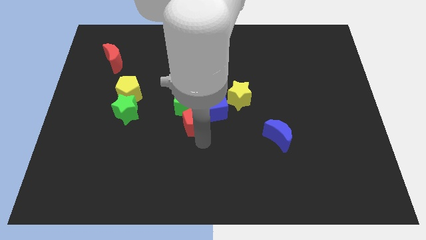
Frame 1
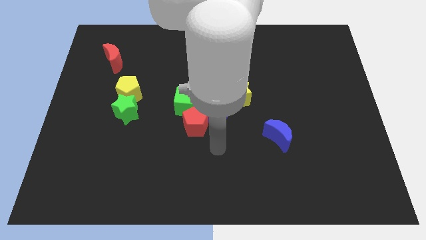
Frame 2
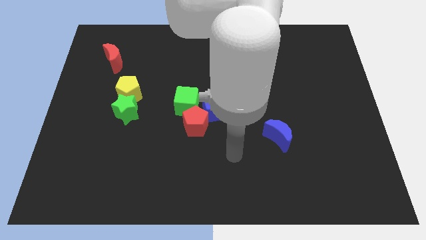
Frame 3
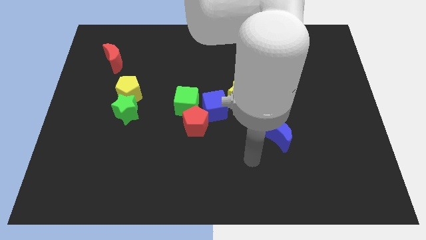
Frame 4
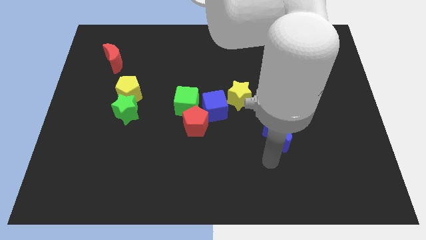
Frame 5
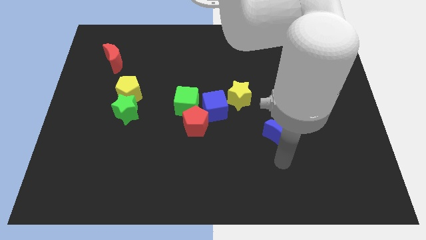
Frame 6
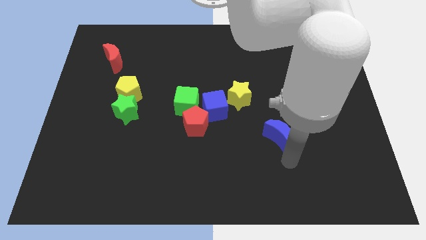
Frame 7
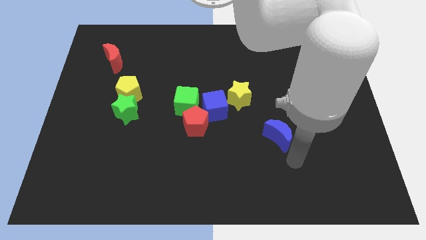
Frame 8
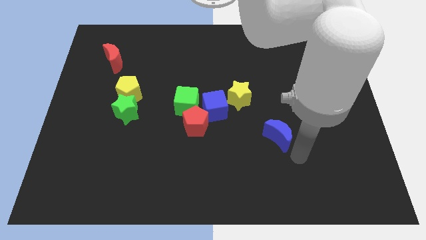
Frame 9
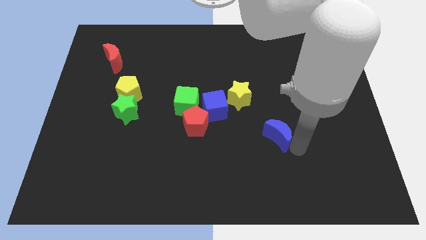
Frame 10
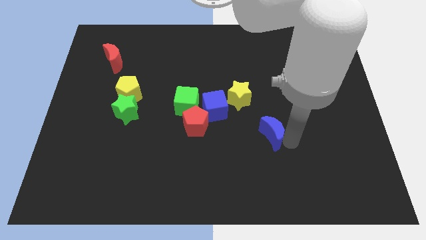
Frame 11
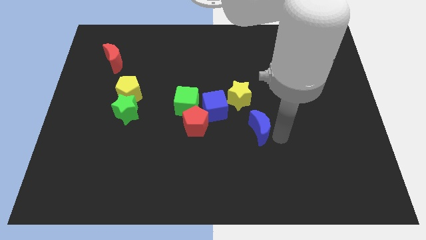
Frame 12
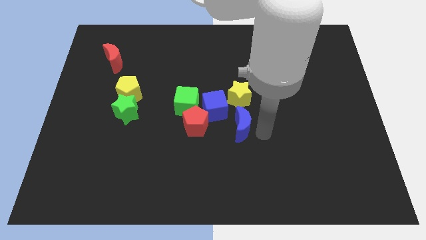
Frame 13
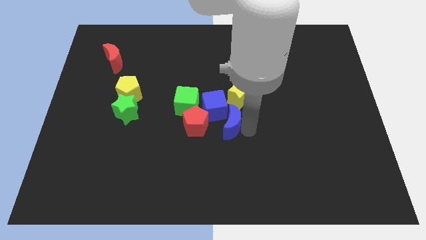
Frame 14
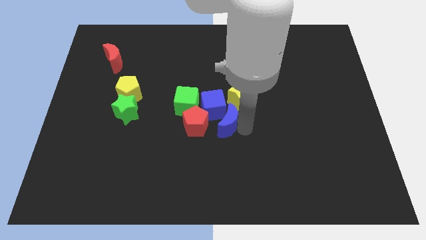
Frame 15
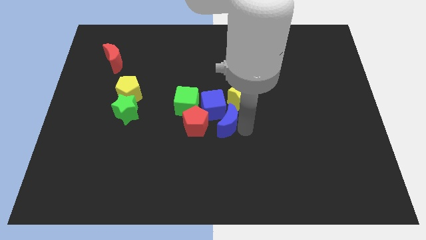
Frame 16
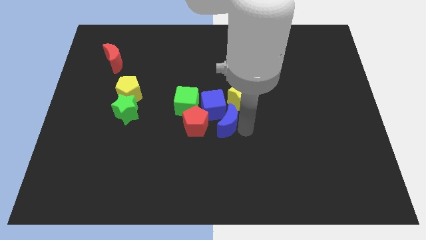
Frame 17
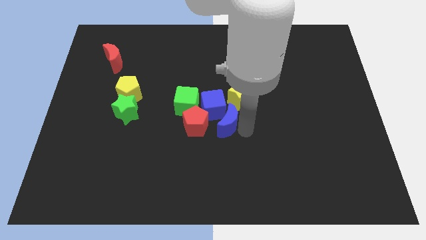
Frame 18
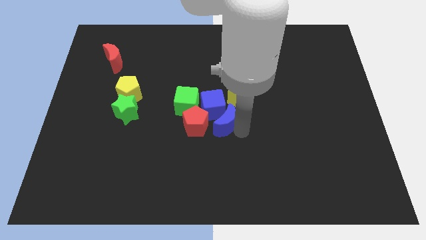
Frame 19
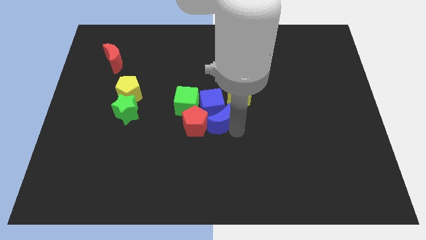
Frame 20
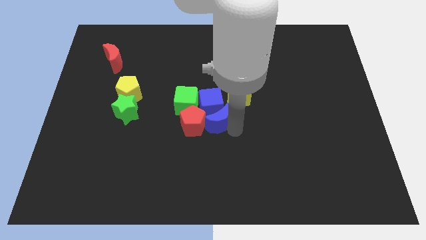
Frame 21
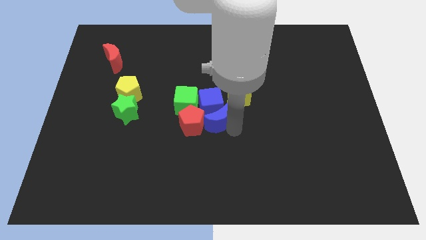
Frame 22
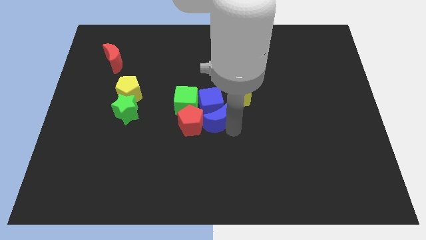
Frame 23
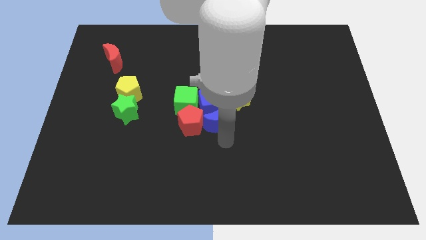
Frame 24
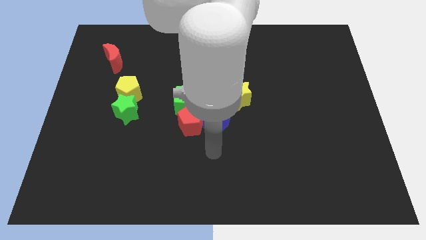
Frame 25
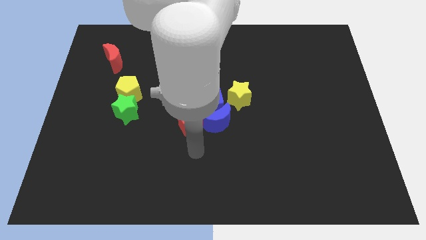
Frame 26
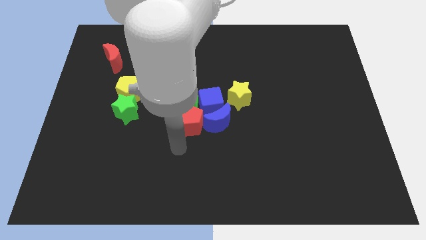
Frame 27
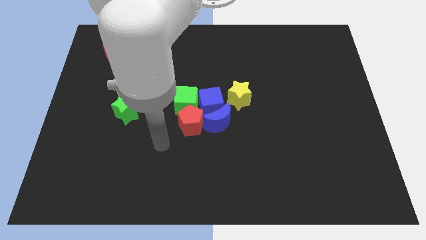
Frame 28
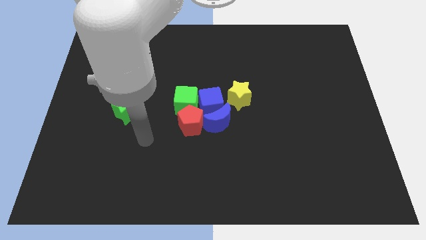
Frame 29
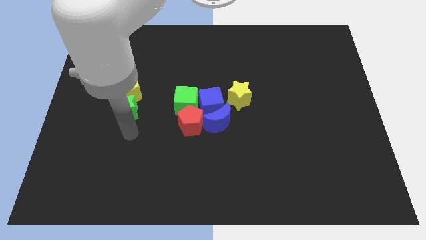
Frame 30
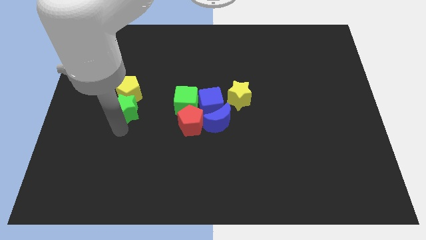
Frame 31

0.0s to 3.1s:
push the blue moon into the group of blocks

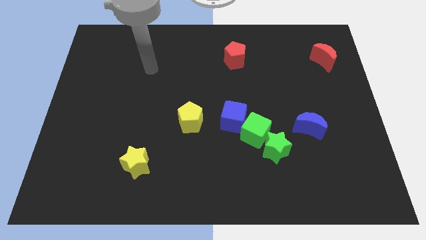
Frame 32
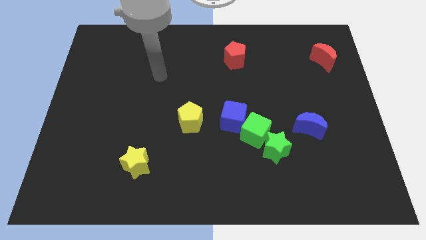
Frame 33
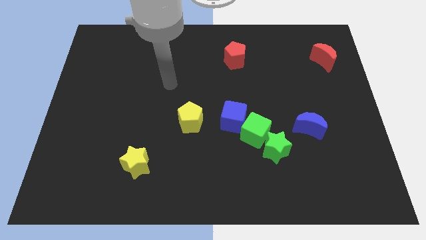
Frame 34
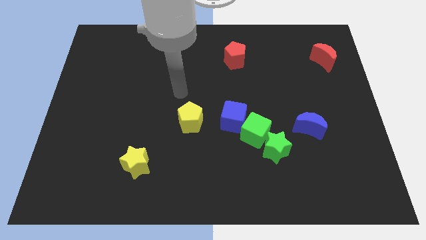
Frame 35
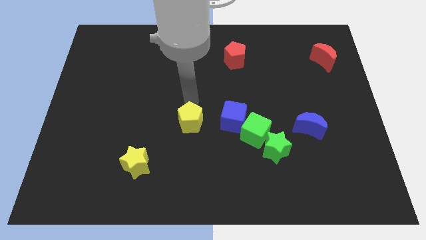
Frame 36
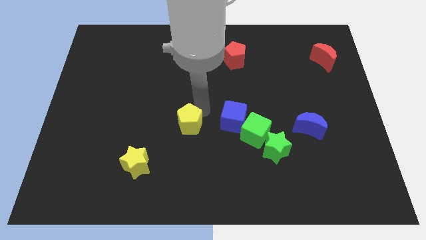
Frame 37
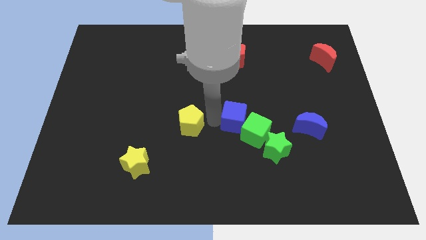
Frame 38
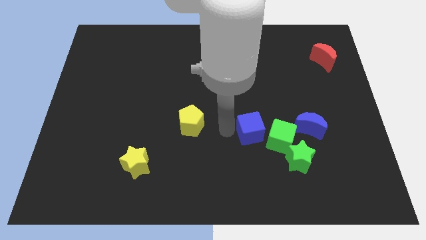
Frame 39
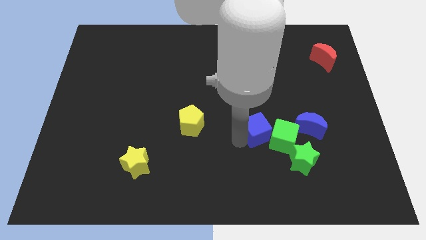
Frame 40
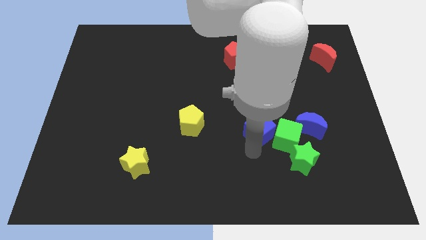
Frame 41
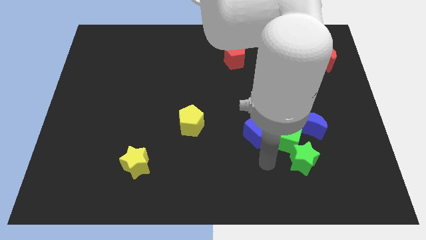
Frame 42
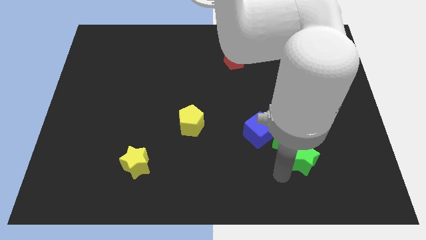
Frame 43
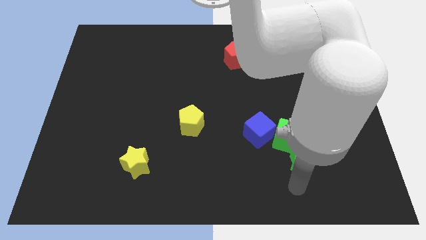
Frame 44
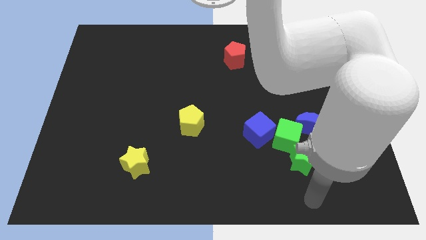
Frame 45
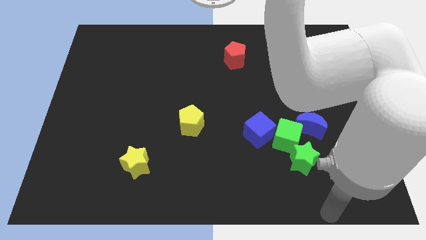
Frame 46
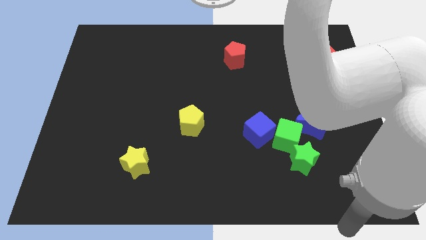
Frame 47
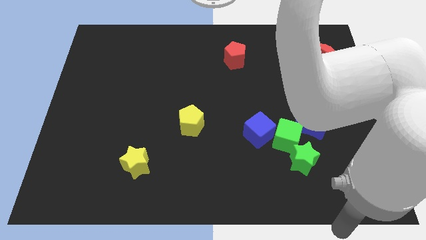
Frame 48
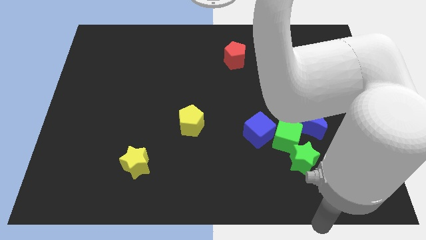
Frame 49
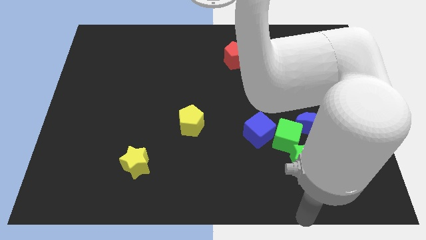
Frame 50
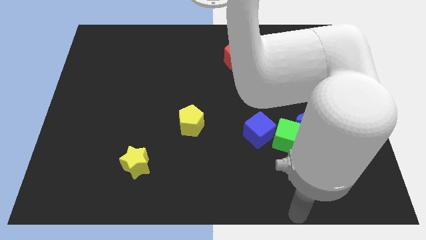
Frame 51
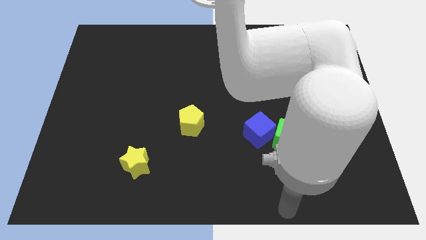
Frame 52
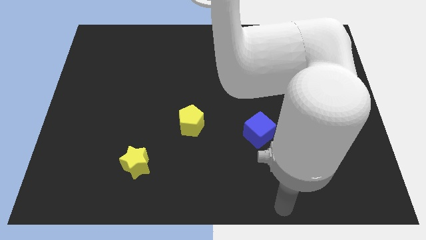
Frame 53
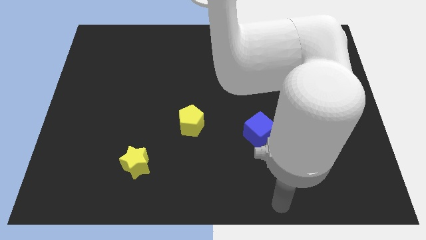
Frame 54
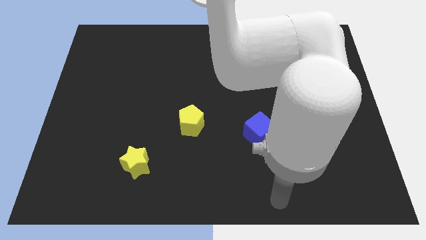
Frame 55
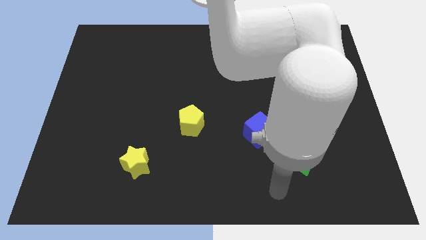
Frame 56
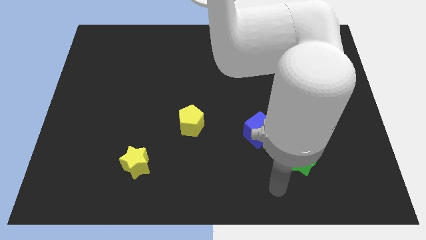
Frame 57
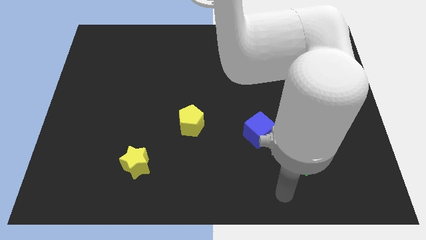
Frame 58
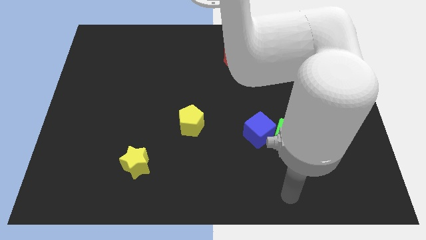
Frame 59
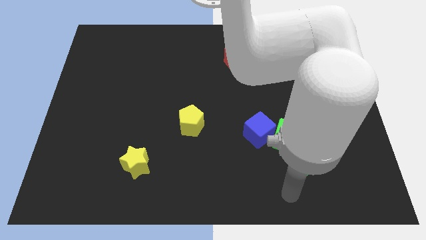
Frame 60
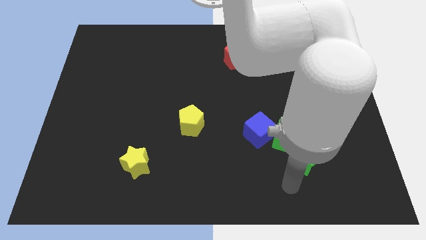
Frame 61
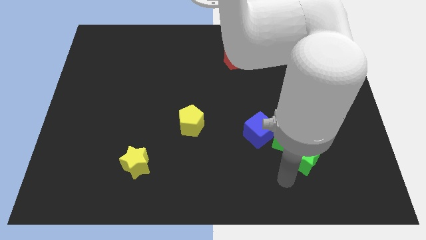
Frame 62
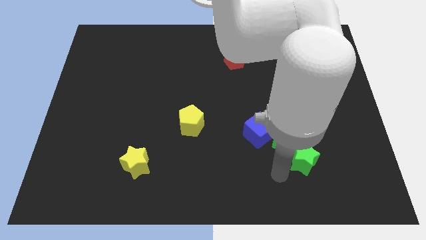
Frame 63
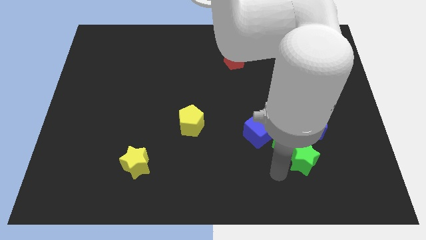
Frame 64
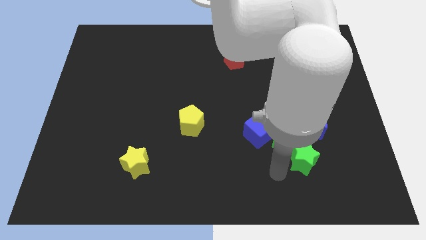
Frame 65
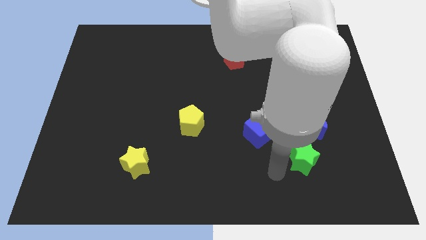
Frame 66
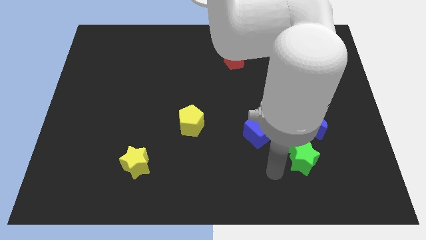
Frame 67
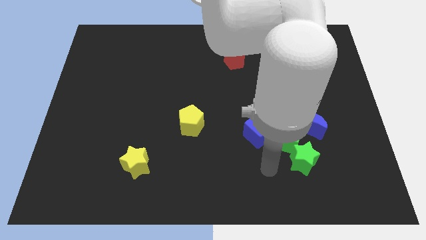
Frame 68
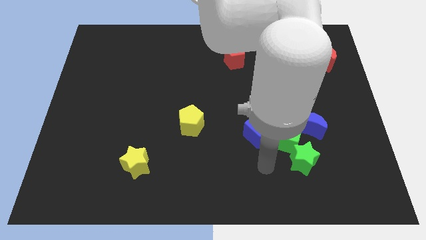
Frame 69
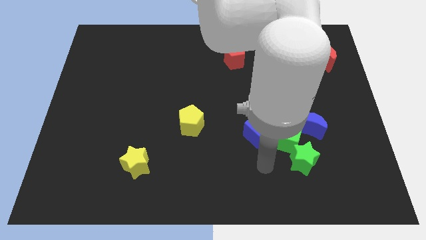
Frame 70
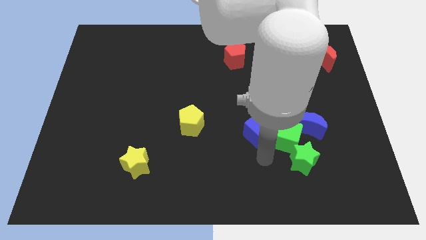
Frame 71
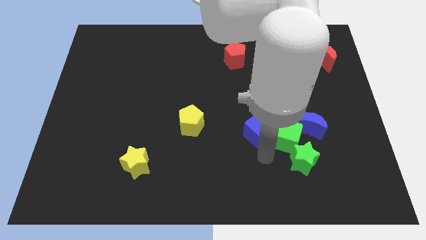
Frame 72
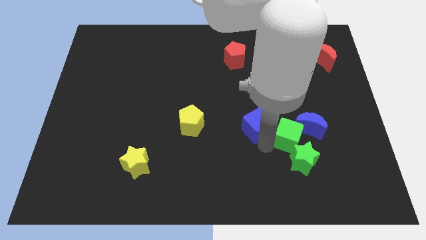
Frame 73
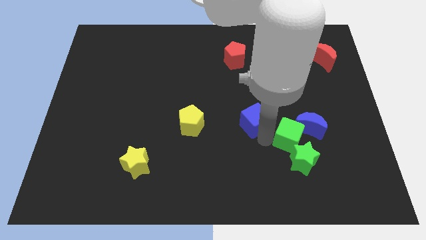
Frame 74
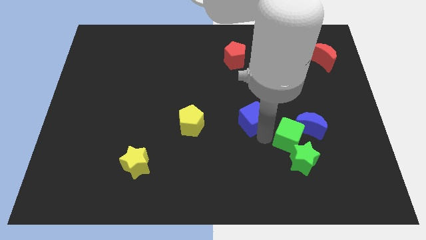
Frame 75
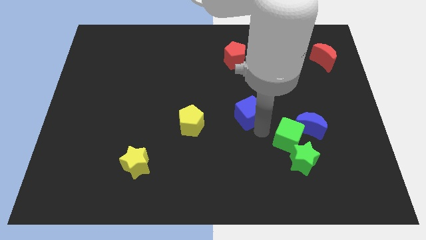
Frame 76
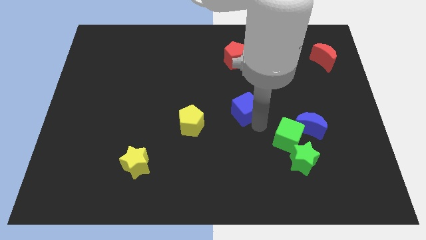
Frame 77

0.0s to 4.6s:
separate the blue cube and green cube

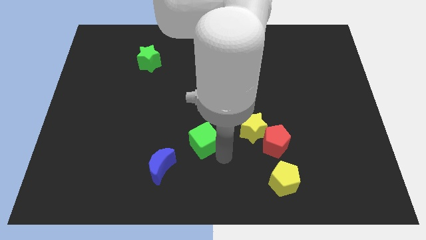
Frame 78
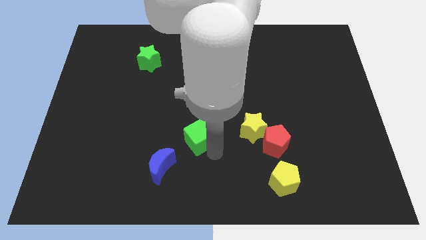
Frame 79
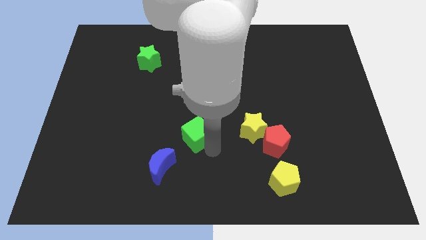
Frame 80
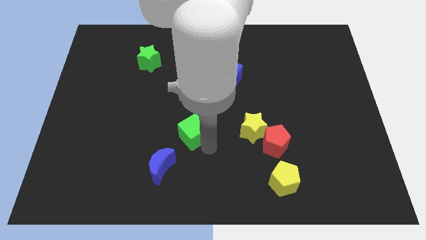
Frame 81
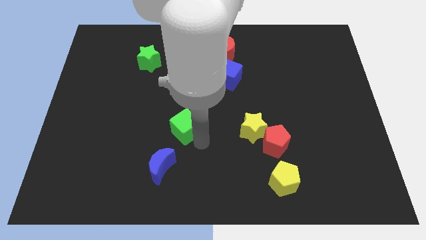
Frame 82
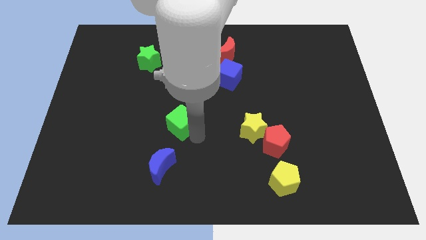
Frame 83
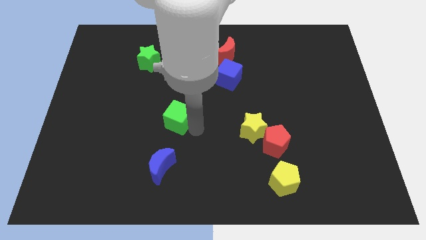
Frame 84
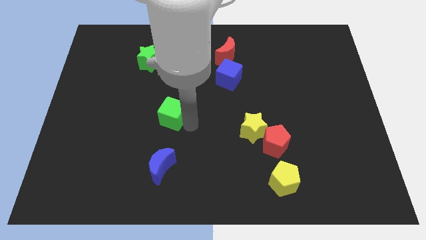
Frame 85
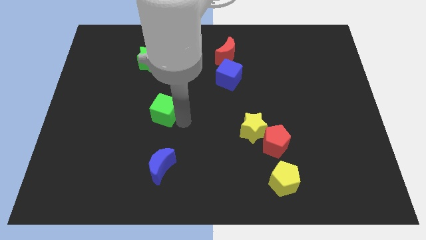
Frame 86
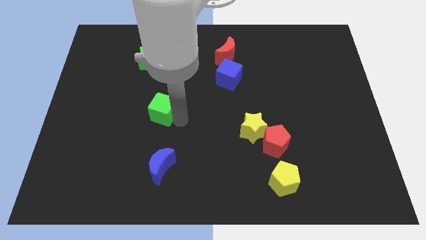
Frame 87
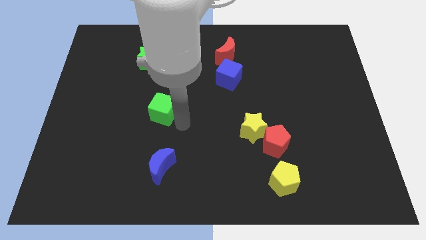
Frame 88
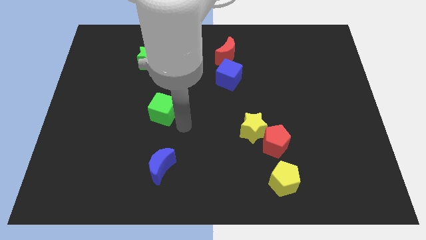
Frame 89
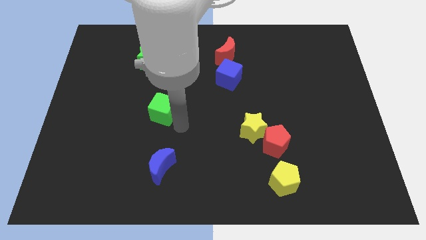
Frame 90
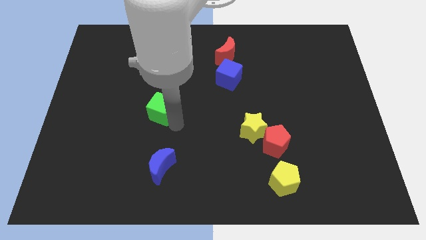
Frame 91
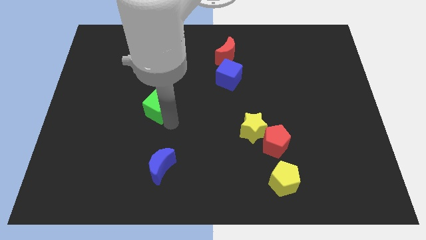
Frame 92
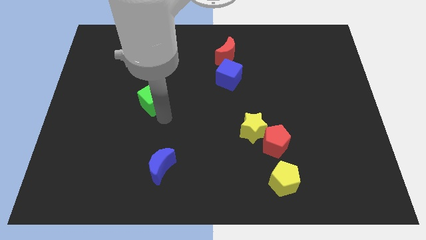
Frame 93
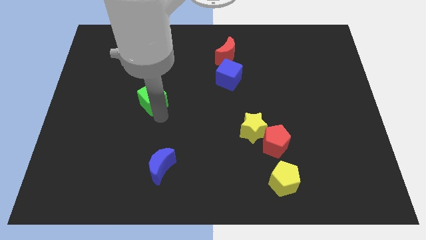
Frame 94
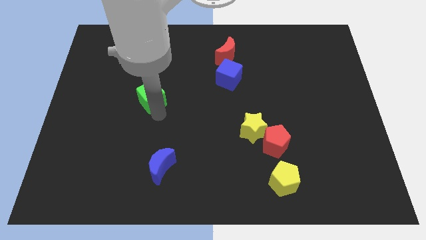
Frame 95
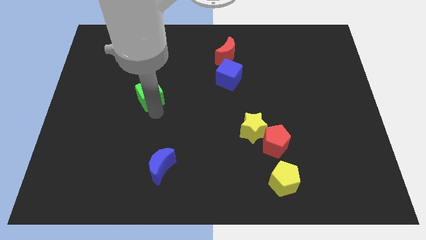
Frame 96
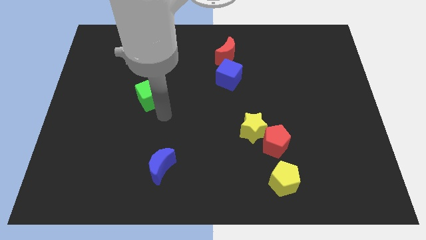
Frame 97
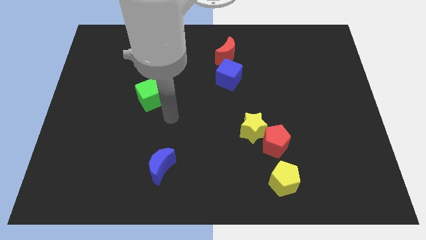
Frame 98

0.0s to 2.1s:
slide green cube below green star
